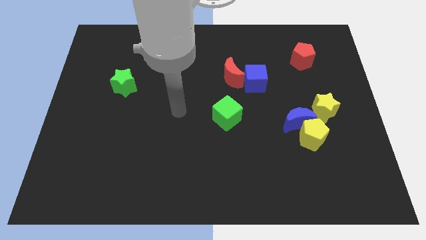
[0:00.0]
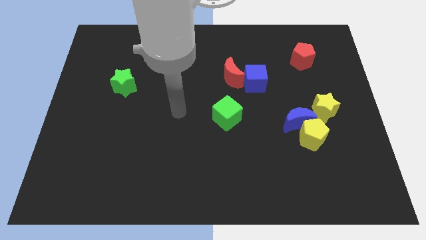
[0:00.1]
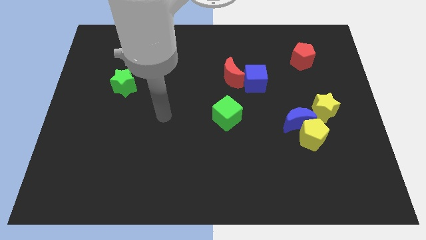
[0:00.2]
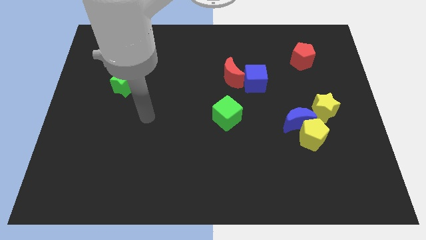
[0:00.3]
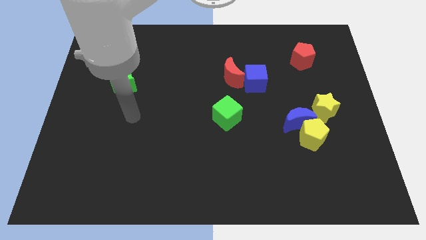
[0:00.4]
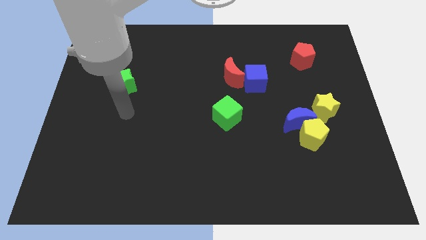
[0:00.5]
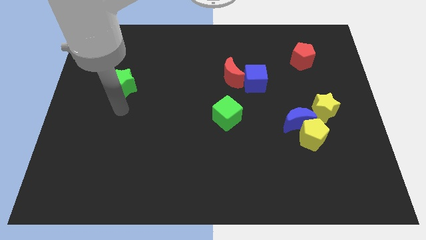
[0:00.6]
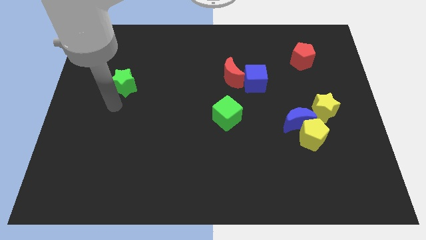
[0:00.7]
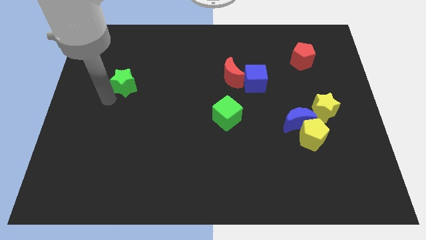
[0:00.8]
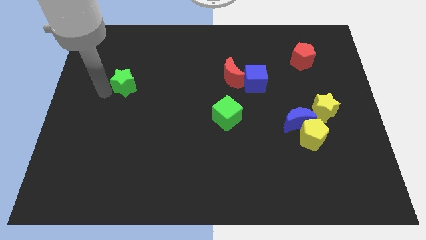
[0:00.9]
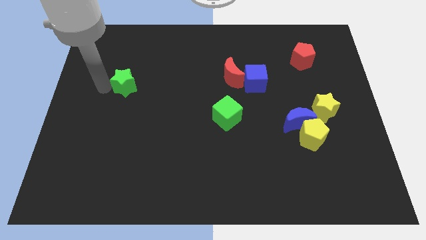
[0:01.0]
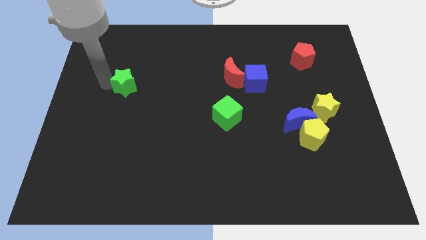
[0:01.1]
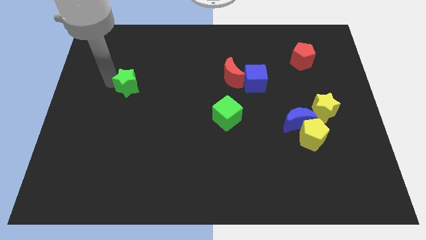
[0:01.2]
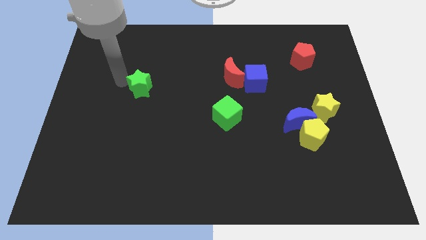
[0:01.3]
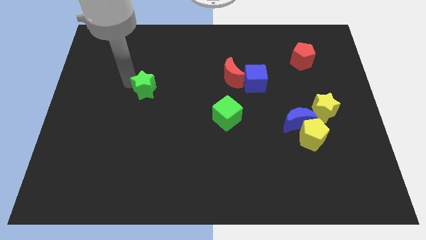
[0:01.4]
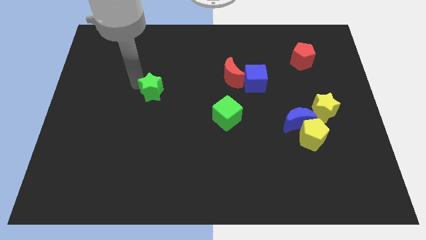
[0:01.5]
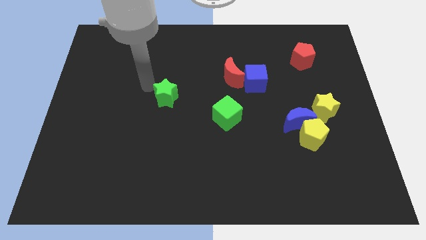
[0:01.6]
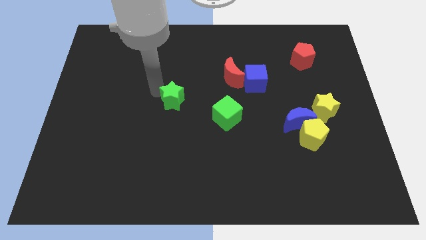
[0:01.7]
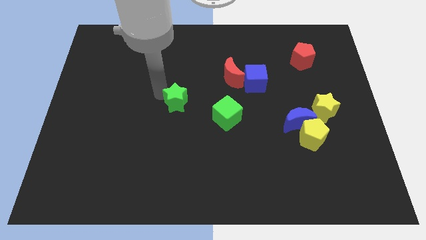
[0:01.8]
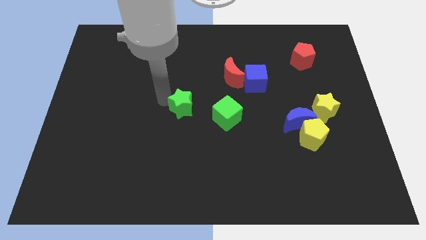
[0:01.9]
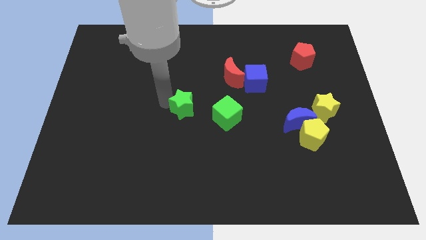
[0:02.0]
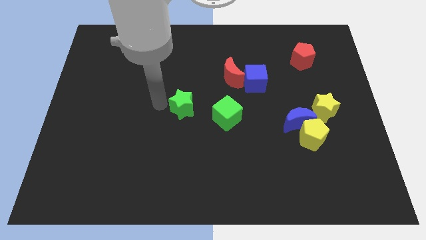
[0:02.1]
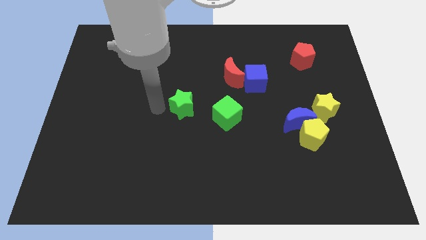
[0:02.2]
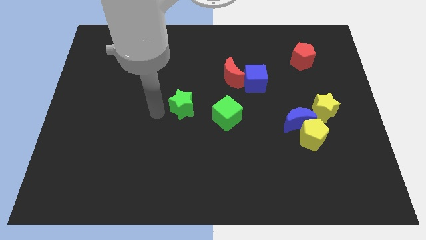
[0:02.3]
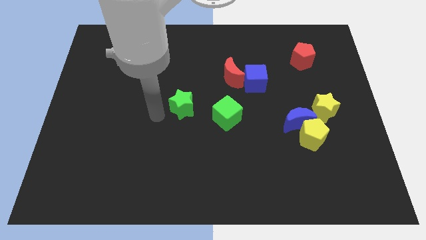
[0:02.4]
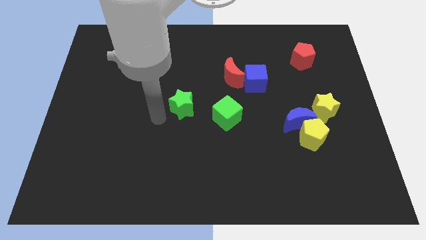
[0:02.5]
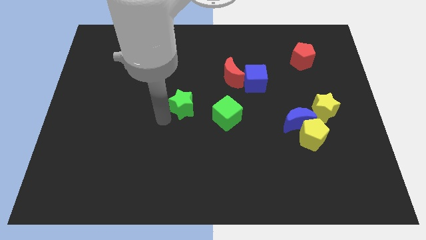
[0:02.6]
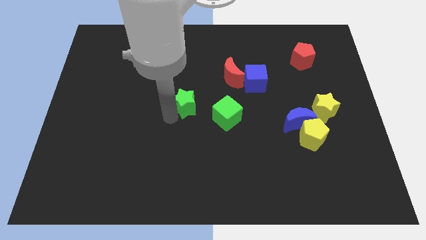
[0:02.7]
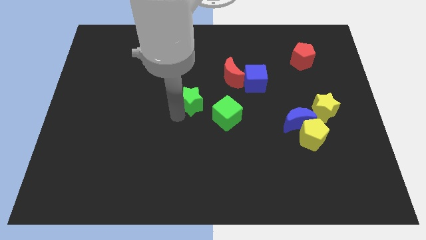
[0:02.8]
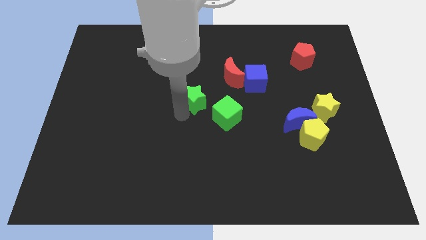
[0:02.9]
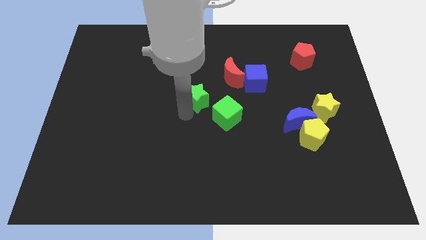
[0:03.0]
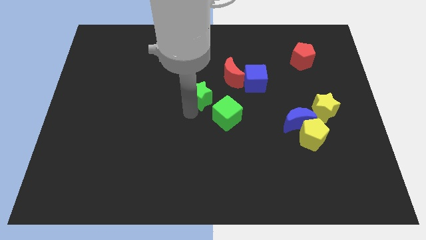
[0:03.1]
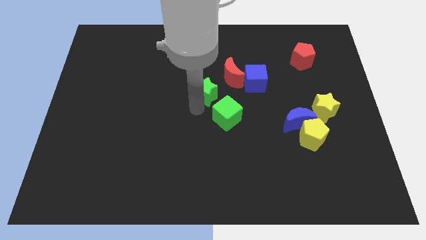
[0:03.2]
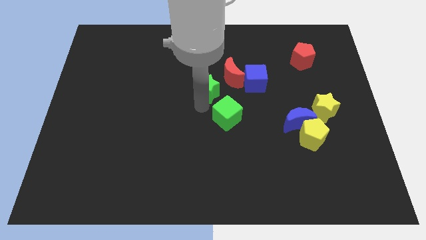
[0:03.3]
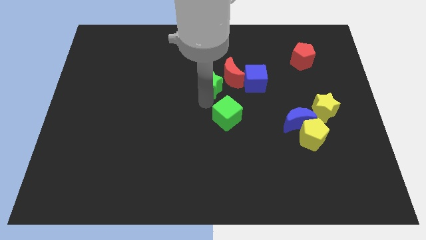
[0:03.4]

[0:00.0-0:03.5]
move the green star to the center of the board

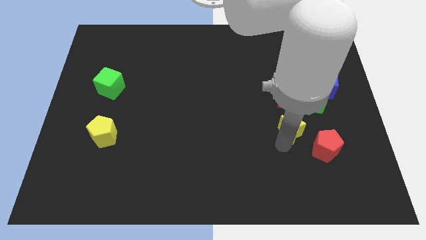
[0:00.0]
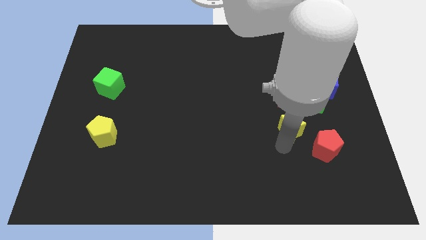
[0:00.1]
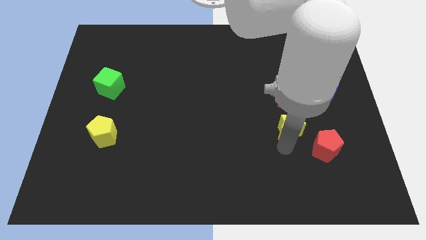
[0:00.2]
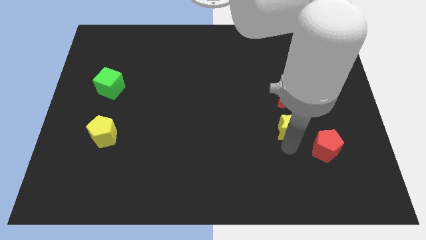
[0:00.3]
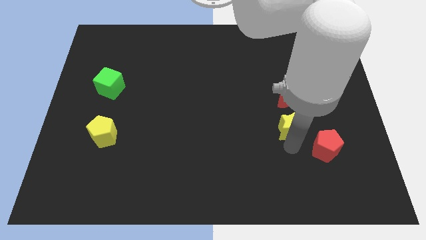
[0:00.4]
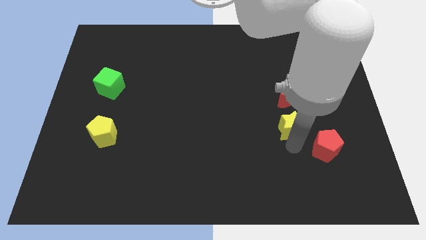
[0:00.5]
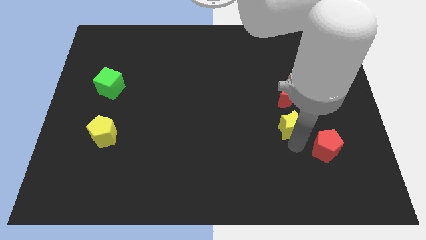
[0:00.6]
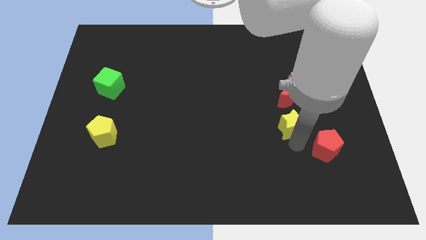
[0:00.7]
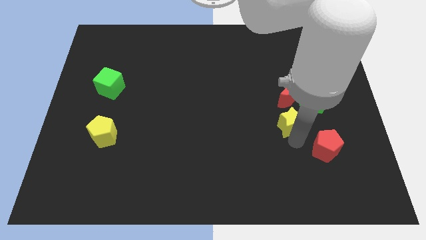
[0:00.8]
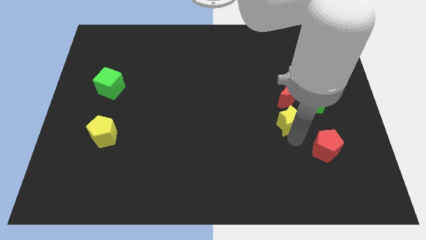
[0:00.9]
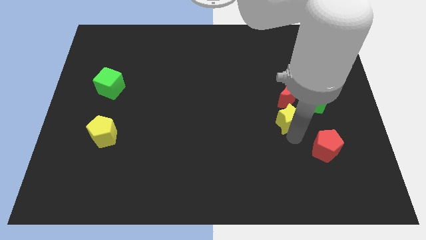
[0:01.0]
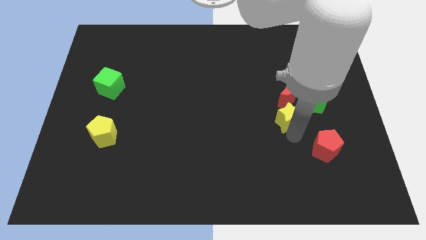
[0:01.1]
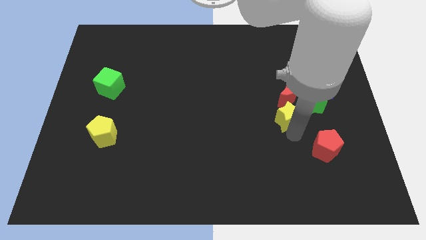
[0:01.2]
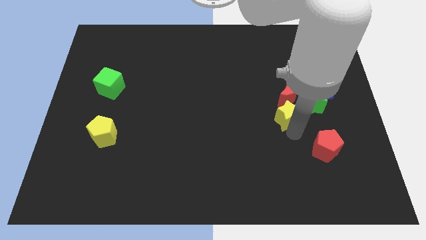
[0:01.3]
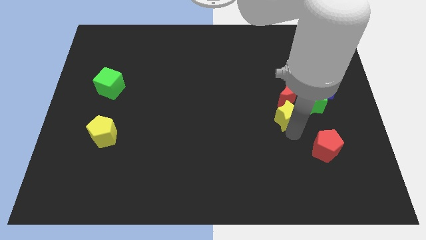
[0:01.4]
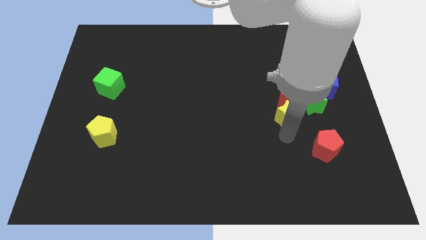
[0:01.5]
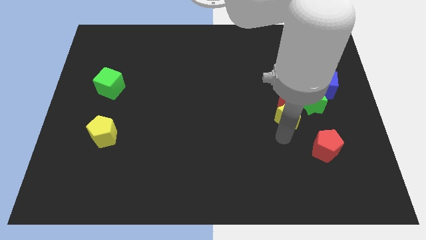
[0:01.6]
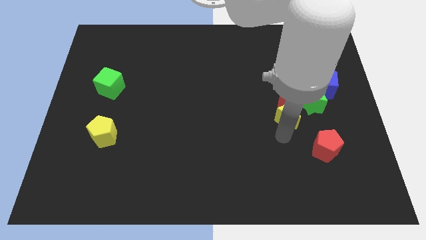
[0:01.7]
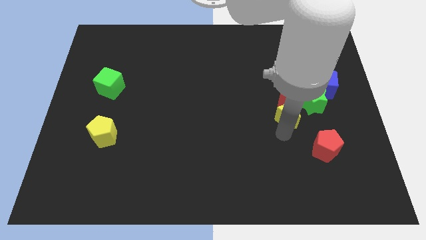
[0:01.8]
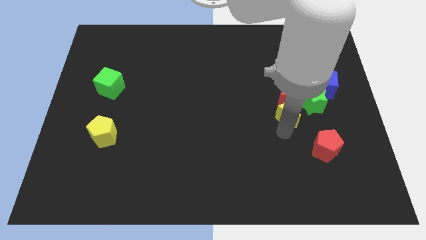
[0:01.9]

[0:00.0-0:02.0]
push the yellow star into the red crescent

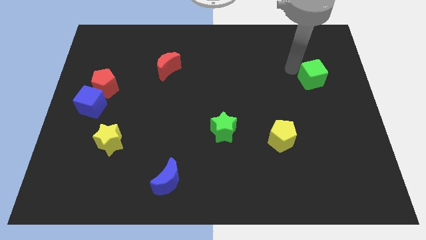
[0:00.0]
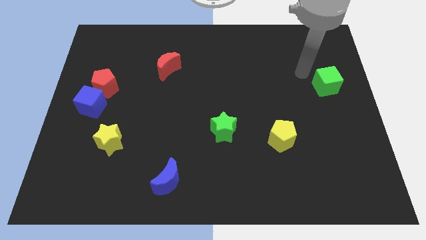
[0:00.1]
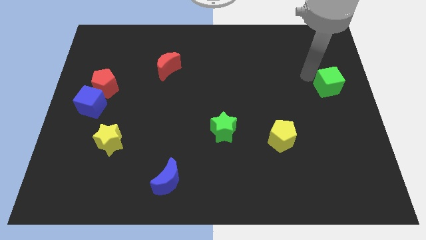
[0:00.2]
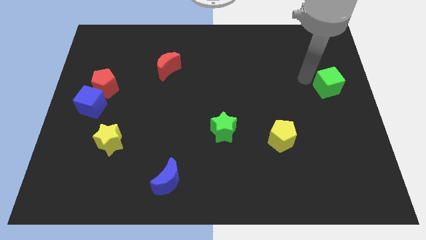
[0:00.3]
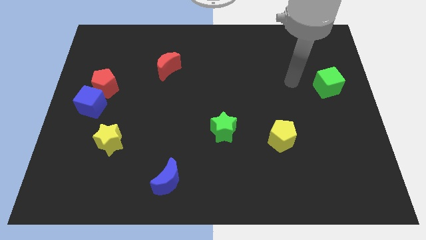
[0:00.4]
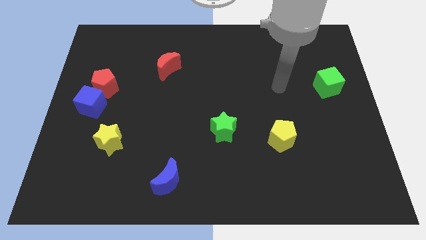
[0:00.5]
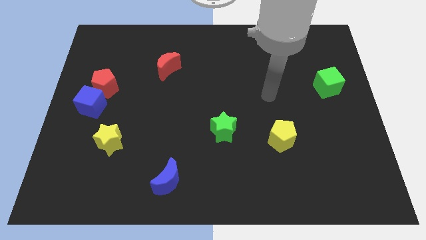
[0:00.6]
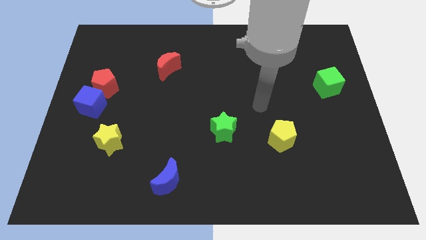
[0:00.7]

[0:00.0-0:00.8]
push the green cube diagonally to the yellow pentagon

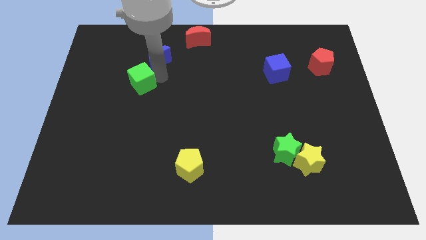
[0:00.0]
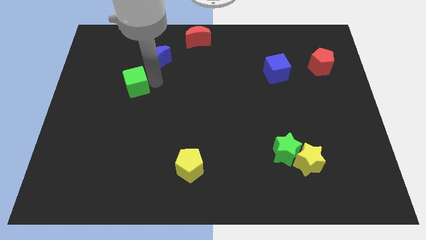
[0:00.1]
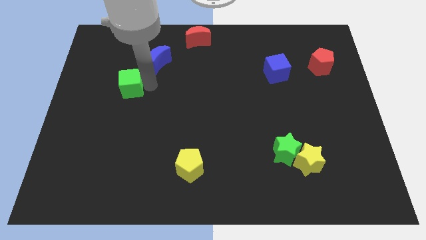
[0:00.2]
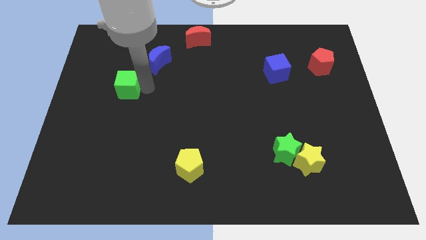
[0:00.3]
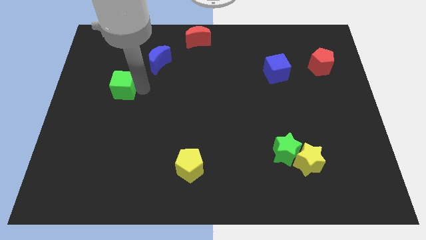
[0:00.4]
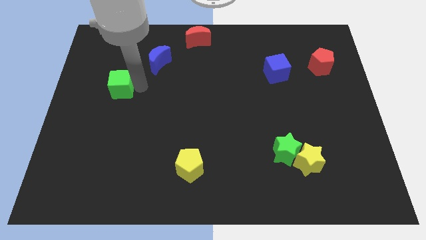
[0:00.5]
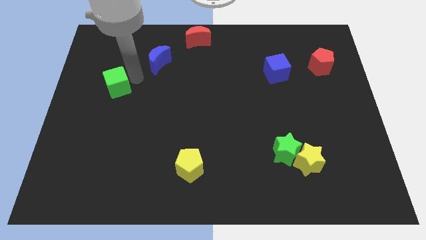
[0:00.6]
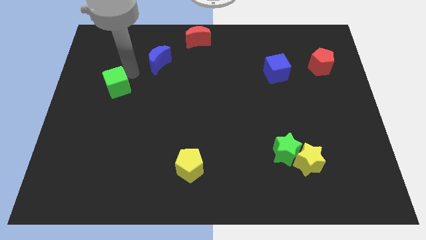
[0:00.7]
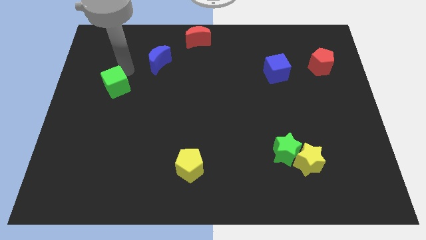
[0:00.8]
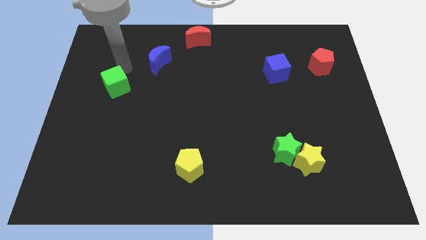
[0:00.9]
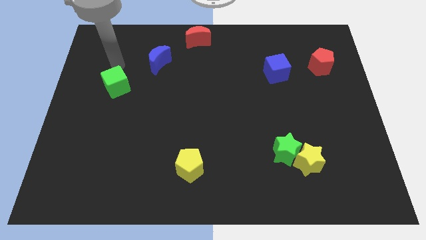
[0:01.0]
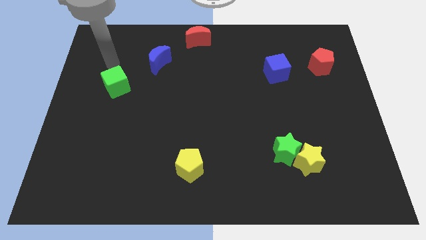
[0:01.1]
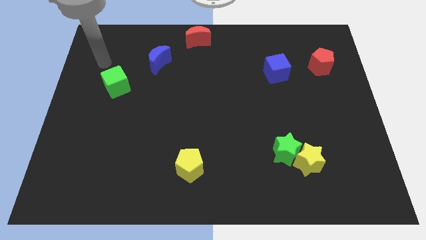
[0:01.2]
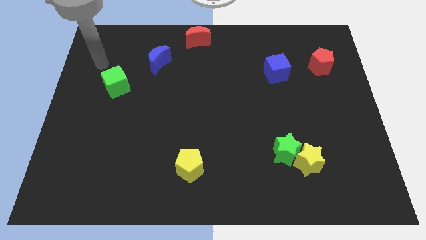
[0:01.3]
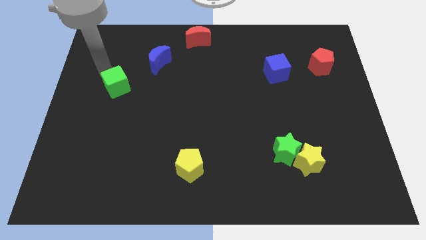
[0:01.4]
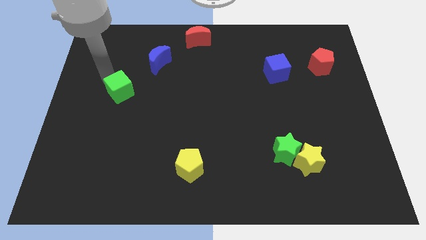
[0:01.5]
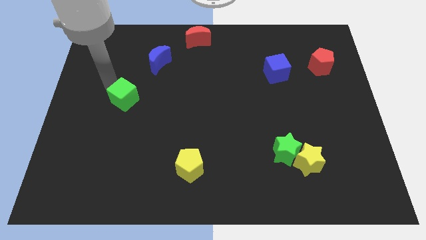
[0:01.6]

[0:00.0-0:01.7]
push the green cube away from the blue crescent

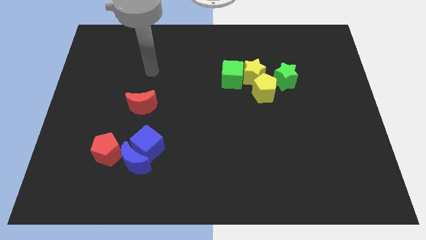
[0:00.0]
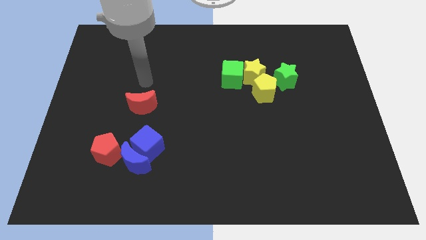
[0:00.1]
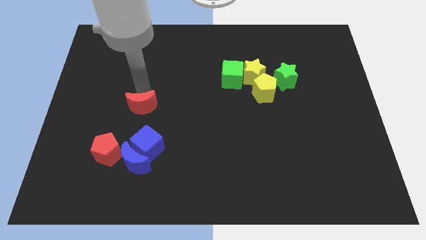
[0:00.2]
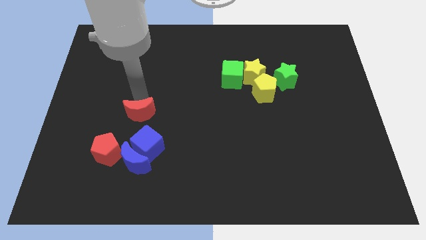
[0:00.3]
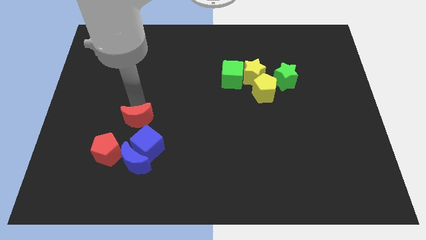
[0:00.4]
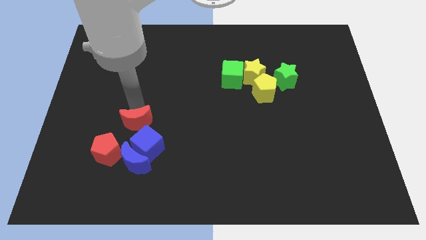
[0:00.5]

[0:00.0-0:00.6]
push red crescent towards blue cube

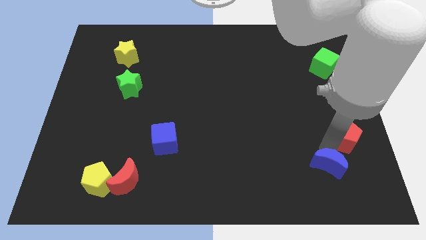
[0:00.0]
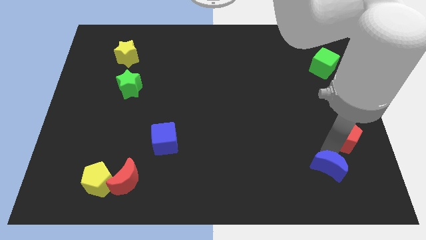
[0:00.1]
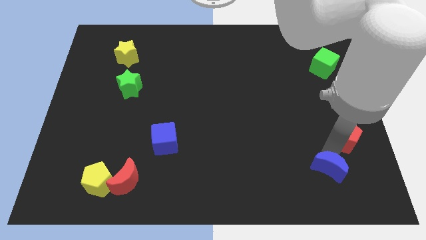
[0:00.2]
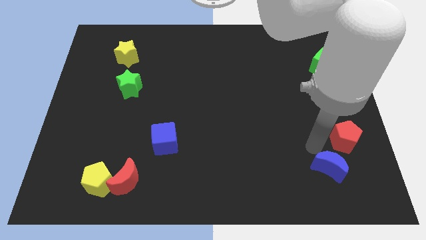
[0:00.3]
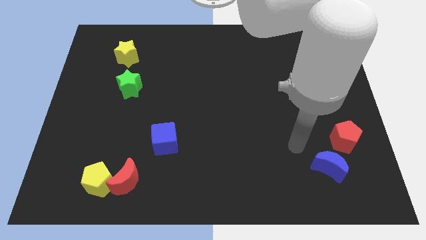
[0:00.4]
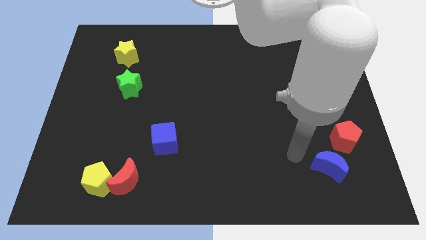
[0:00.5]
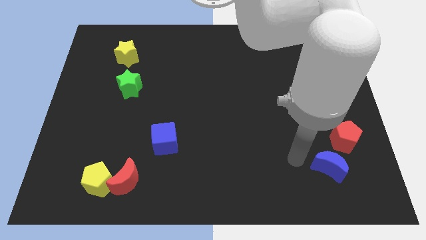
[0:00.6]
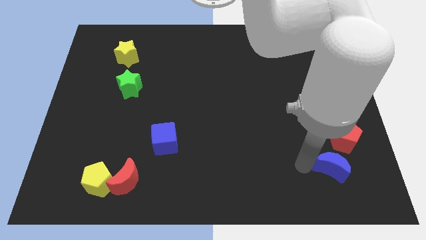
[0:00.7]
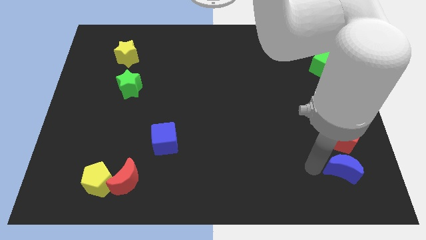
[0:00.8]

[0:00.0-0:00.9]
separate blue moon from red pentagon
